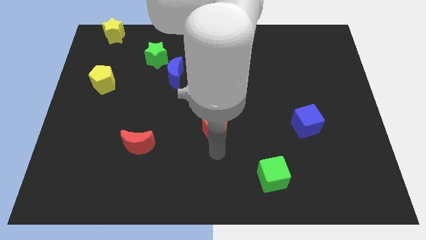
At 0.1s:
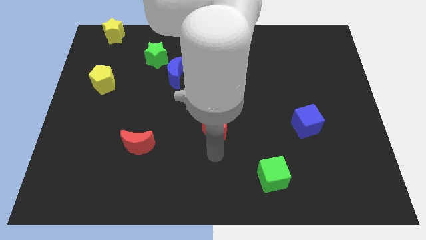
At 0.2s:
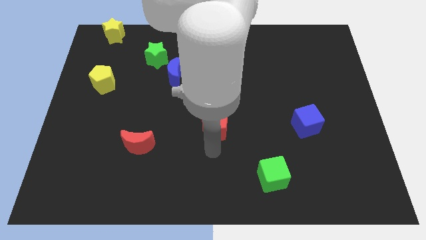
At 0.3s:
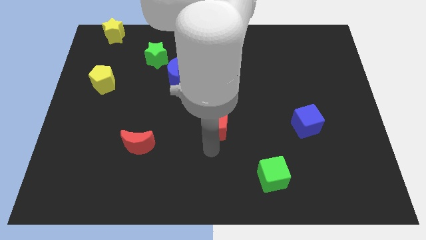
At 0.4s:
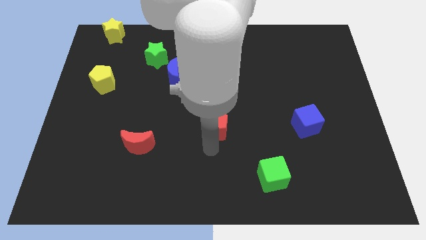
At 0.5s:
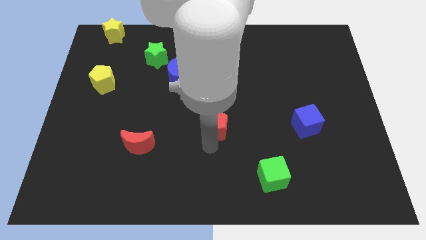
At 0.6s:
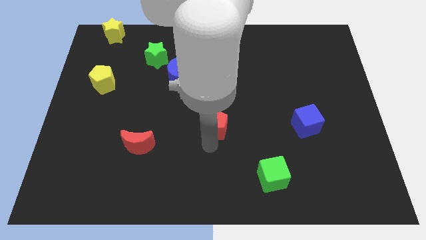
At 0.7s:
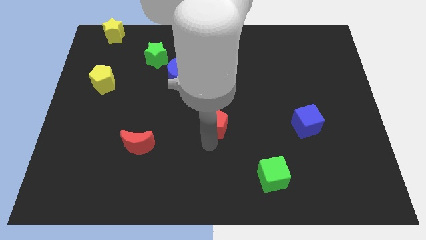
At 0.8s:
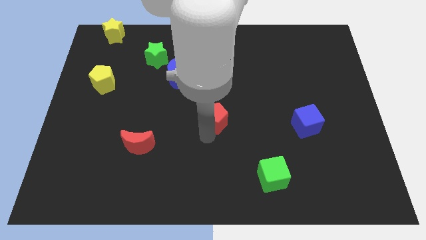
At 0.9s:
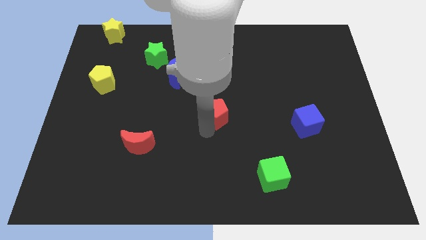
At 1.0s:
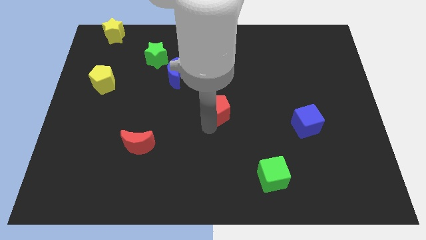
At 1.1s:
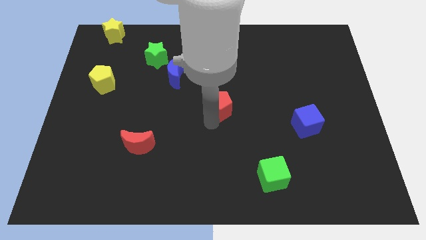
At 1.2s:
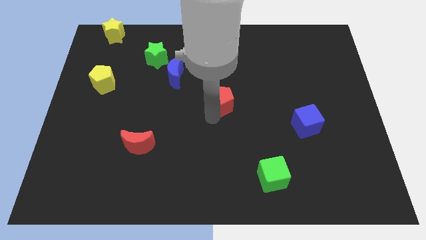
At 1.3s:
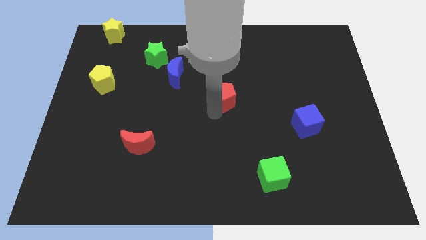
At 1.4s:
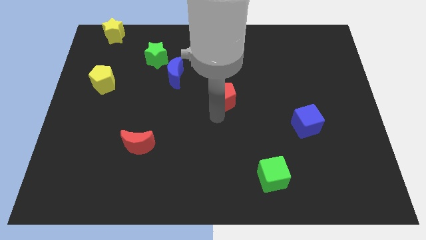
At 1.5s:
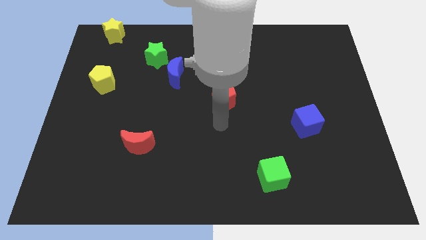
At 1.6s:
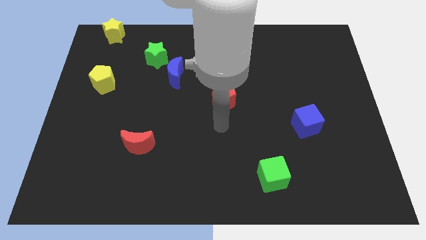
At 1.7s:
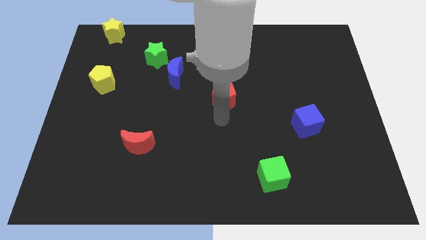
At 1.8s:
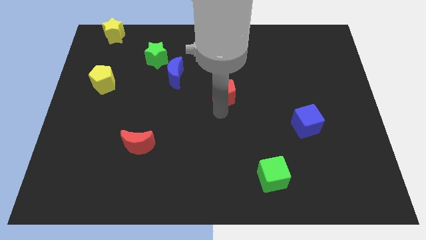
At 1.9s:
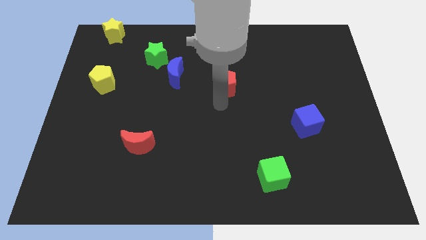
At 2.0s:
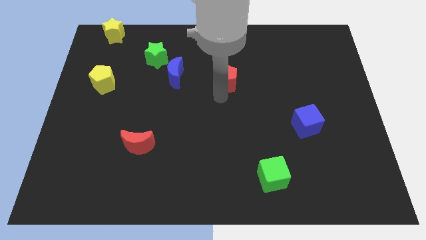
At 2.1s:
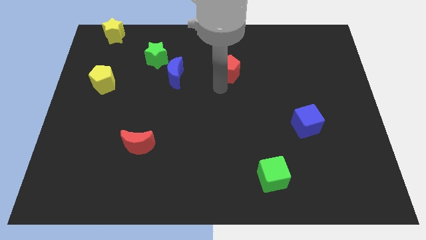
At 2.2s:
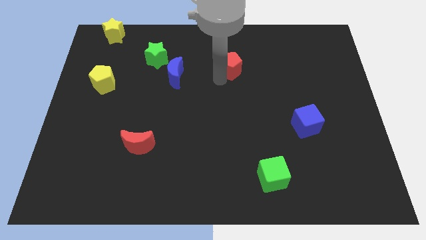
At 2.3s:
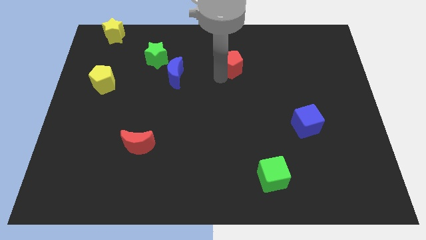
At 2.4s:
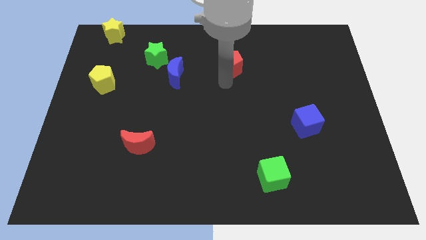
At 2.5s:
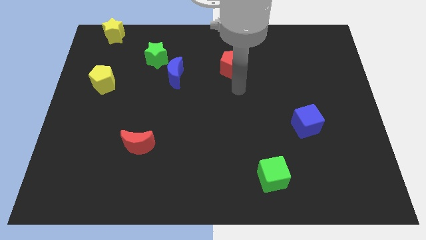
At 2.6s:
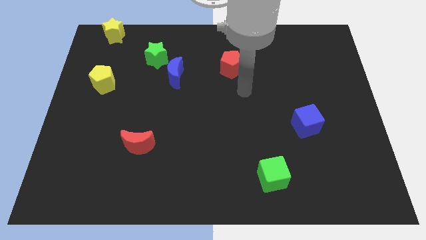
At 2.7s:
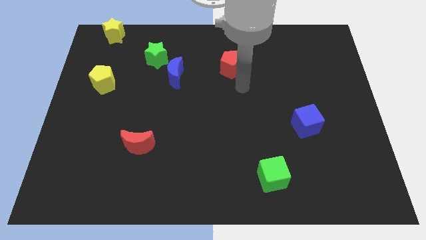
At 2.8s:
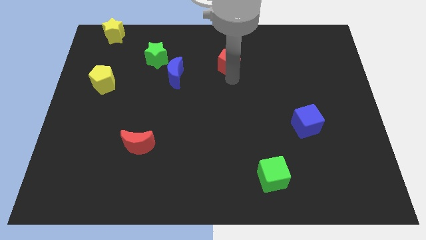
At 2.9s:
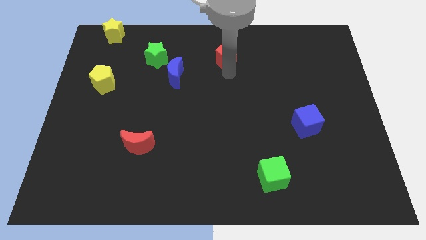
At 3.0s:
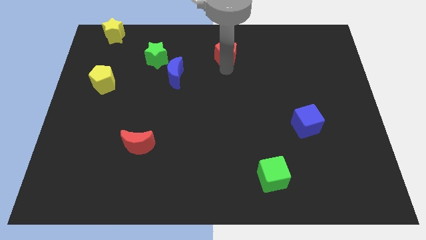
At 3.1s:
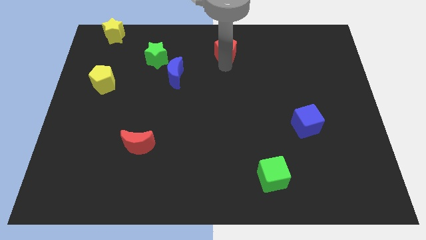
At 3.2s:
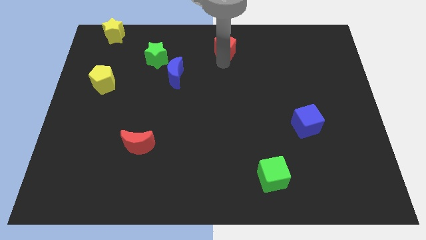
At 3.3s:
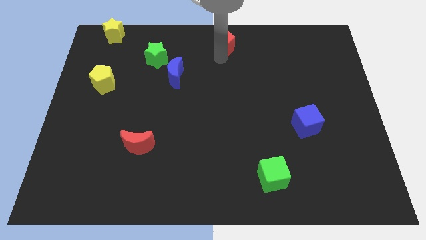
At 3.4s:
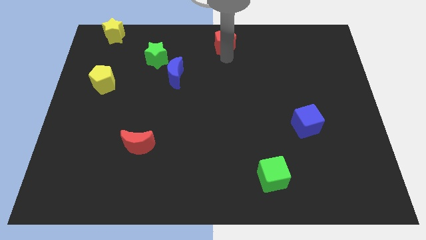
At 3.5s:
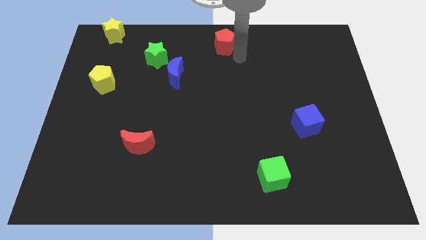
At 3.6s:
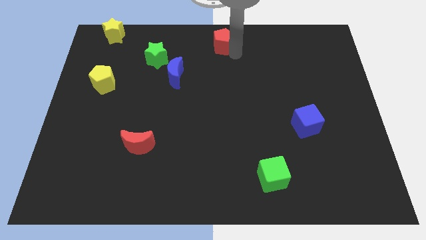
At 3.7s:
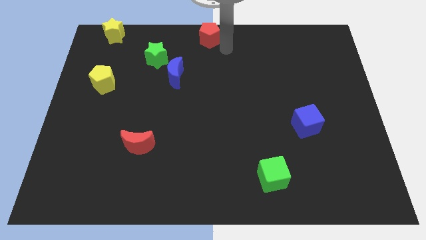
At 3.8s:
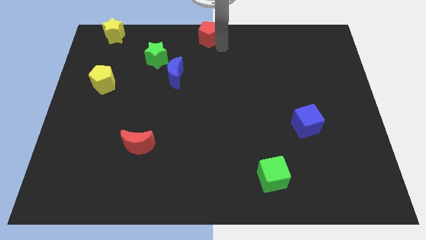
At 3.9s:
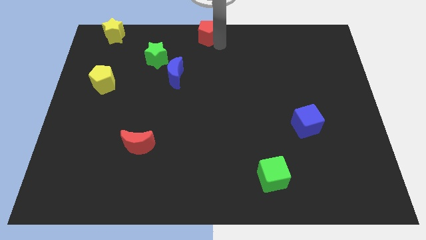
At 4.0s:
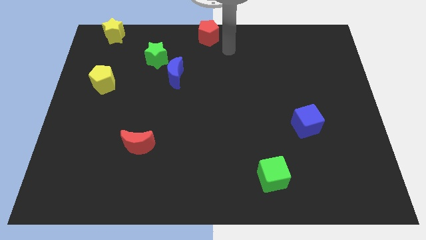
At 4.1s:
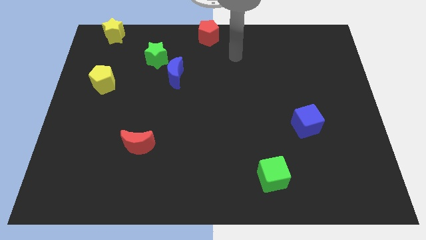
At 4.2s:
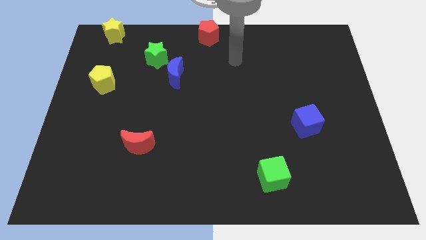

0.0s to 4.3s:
place the red pentagon at the top center of the board

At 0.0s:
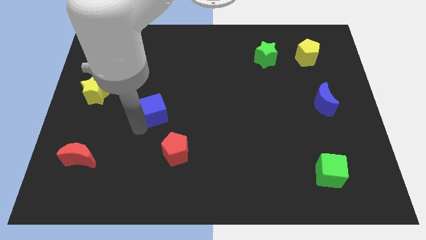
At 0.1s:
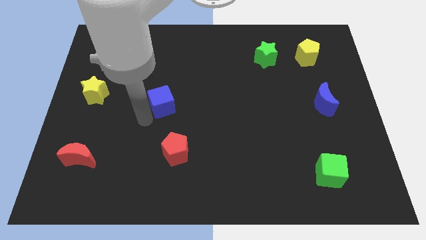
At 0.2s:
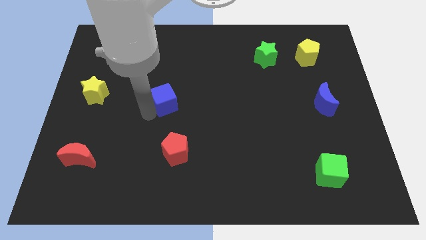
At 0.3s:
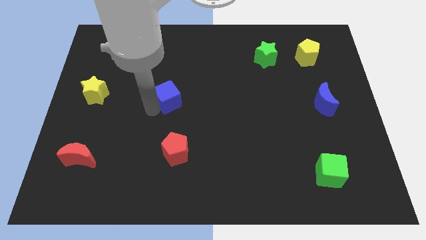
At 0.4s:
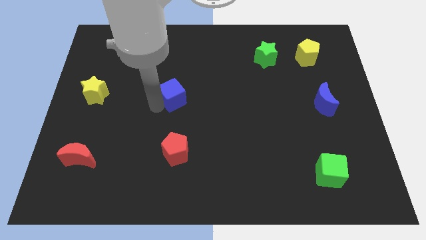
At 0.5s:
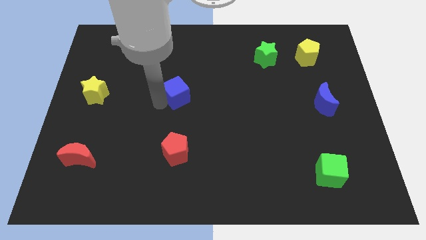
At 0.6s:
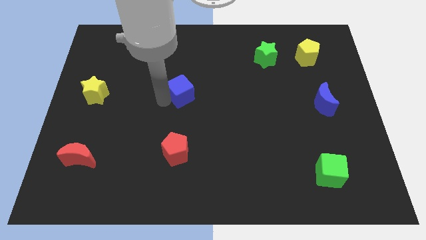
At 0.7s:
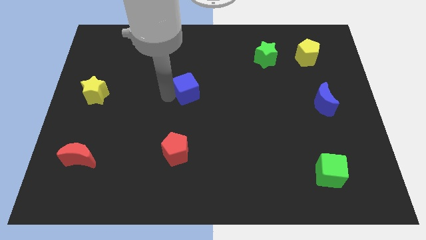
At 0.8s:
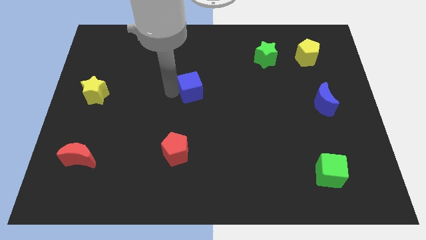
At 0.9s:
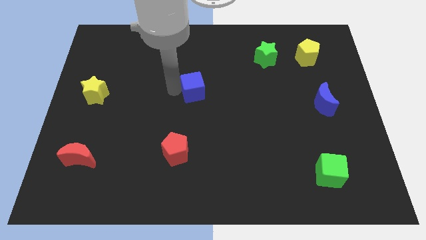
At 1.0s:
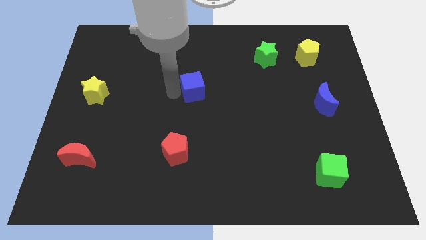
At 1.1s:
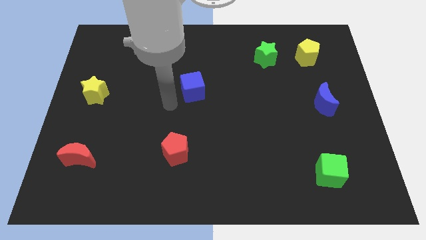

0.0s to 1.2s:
push the blue cube to the top right of the red pentagon

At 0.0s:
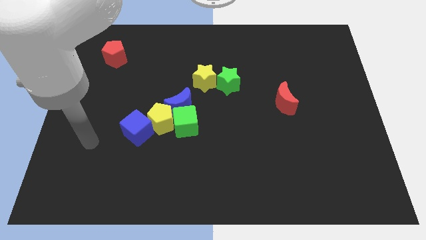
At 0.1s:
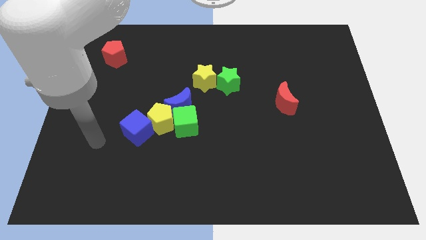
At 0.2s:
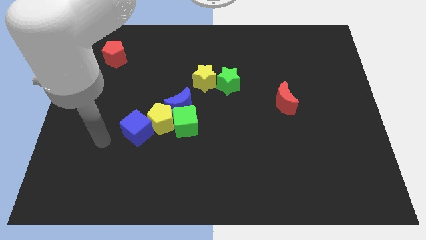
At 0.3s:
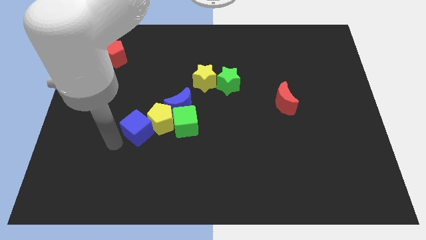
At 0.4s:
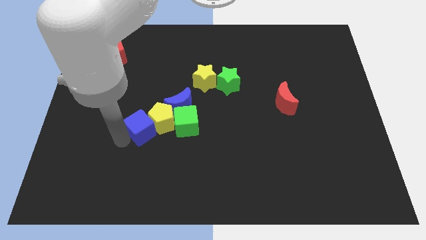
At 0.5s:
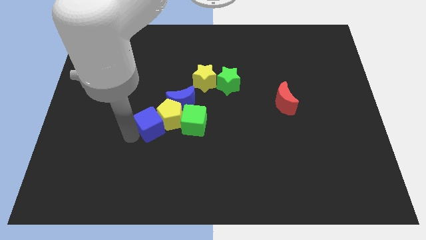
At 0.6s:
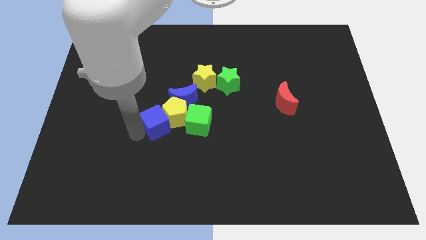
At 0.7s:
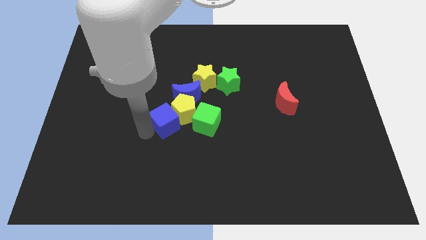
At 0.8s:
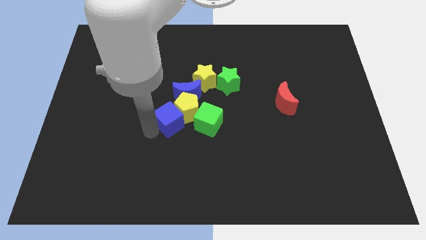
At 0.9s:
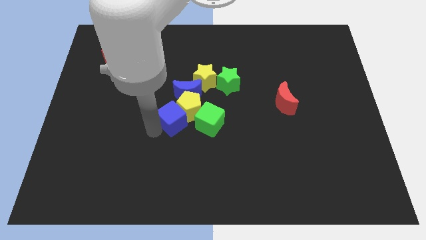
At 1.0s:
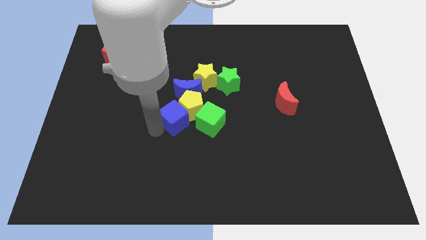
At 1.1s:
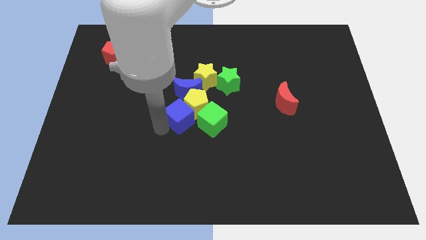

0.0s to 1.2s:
push the blue cube along with the yellow pentagon close to the yellow star

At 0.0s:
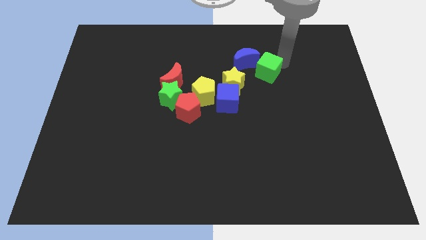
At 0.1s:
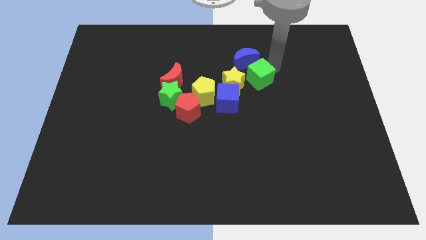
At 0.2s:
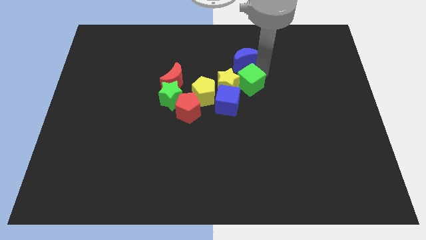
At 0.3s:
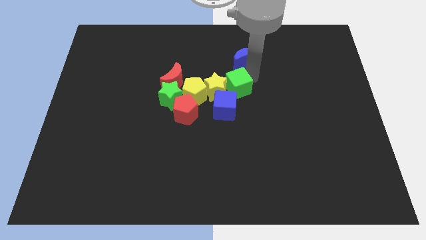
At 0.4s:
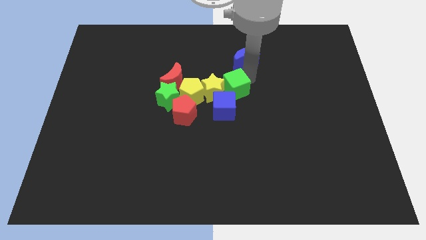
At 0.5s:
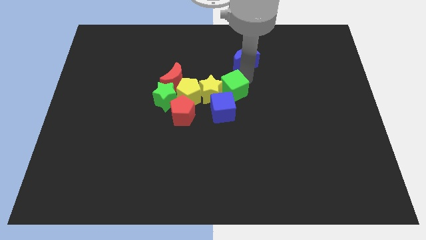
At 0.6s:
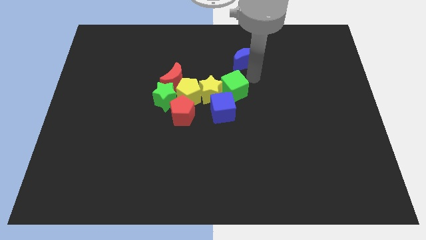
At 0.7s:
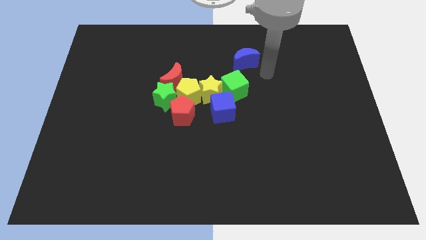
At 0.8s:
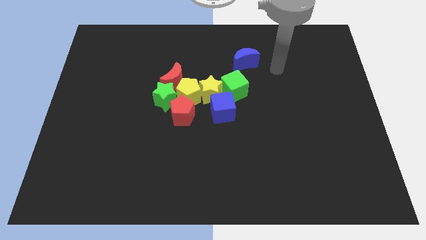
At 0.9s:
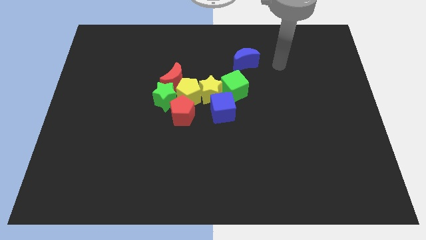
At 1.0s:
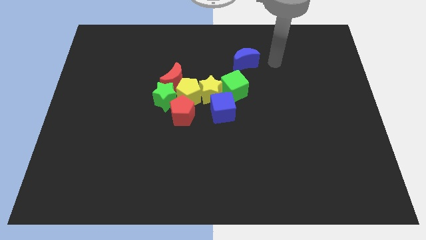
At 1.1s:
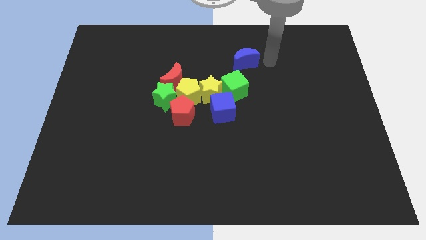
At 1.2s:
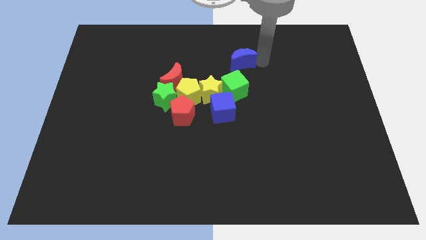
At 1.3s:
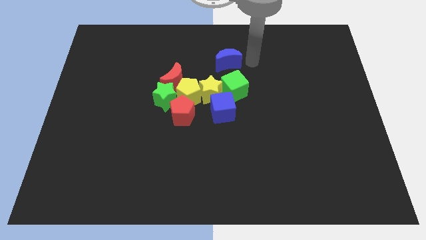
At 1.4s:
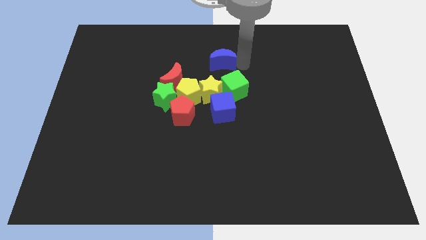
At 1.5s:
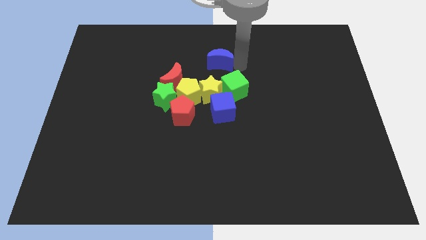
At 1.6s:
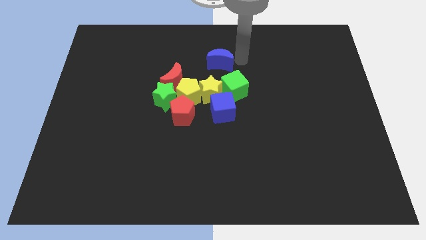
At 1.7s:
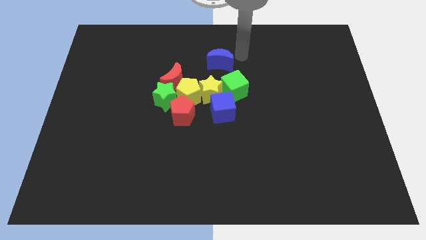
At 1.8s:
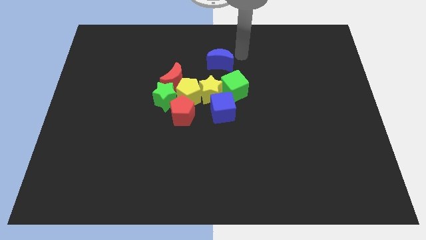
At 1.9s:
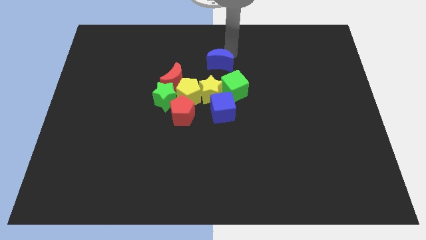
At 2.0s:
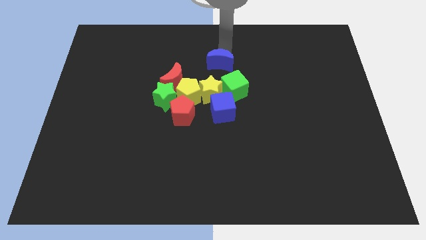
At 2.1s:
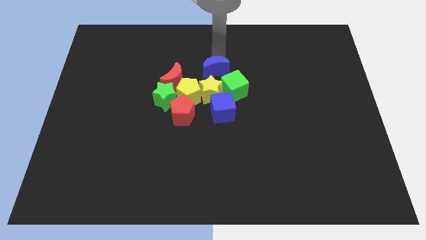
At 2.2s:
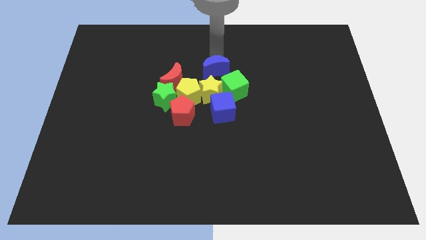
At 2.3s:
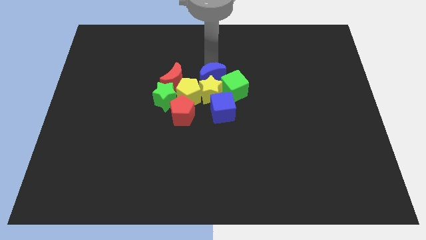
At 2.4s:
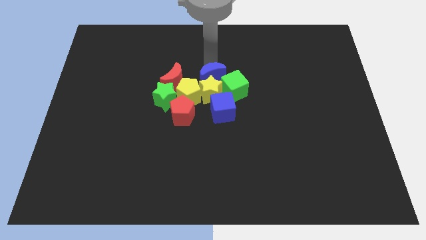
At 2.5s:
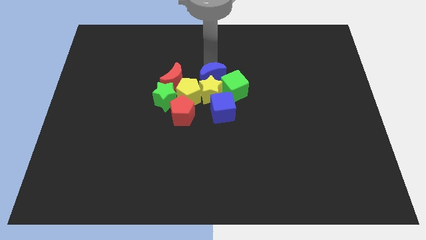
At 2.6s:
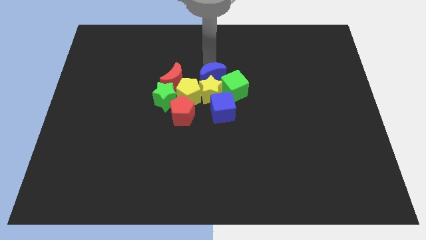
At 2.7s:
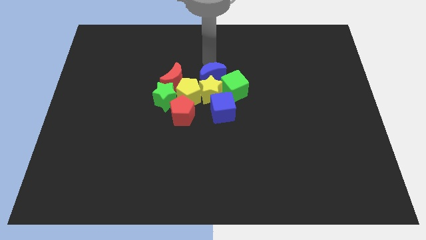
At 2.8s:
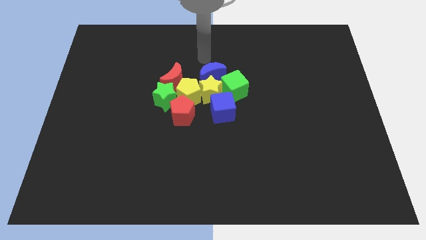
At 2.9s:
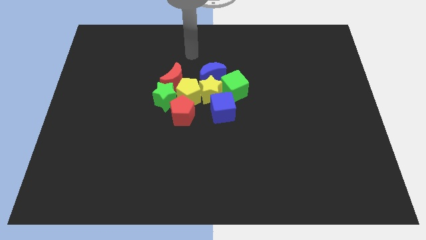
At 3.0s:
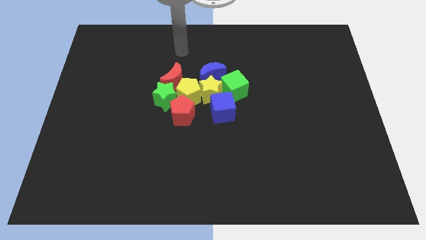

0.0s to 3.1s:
place the blue crescent above the yellow star
